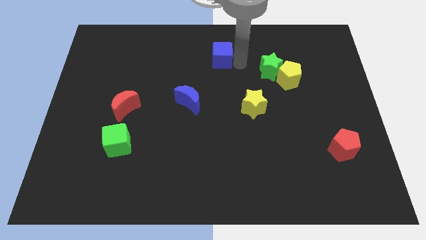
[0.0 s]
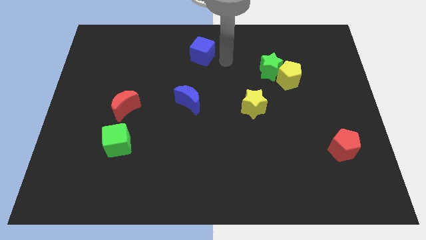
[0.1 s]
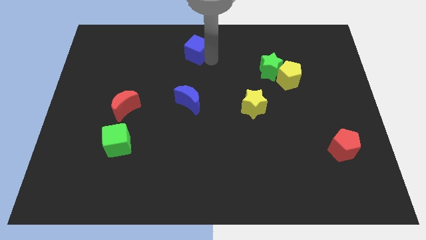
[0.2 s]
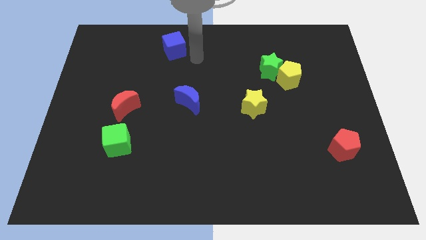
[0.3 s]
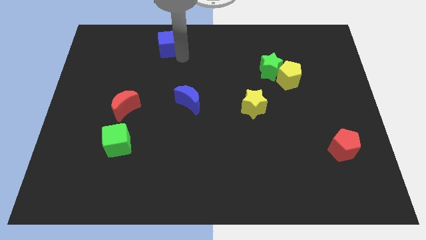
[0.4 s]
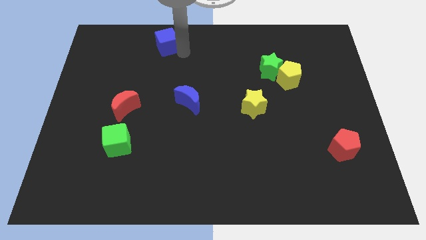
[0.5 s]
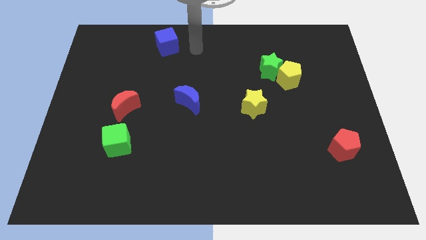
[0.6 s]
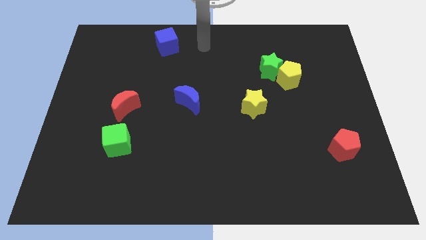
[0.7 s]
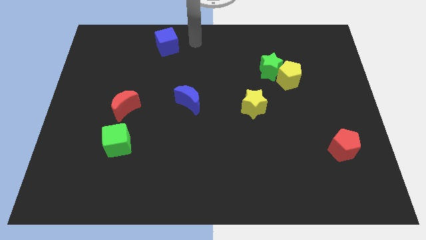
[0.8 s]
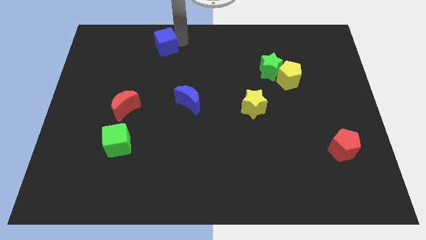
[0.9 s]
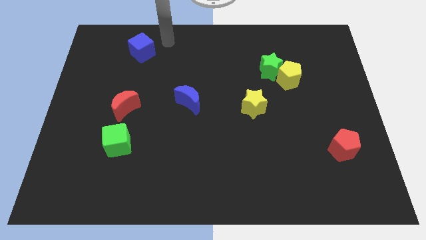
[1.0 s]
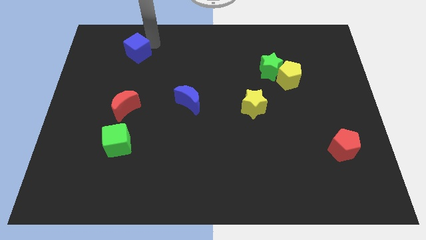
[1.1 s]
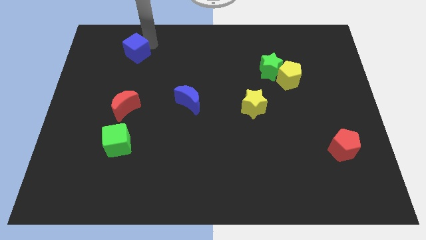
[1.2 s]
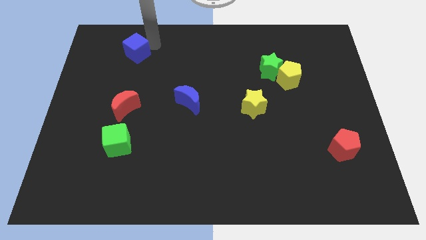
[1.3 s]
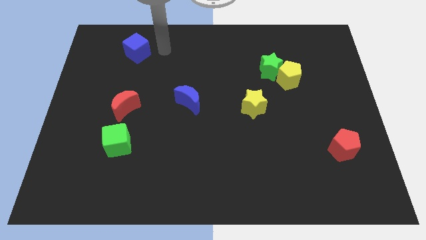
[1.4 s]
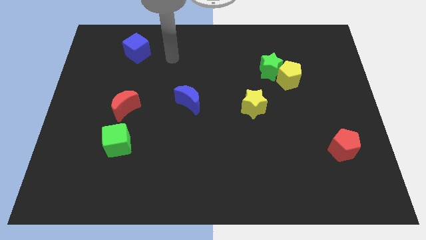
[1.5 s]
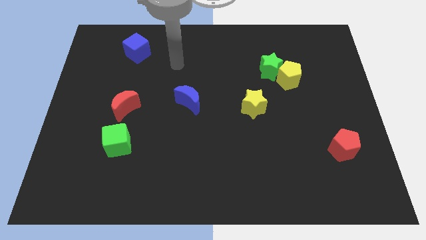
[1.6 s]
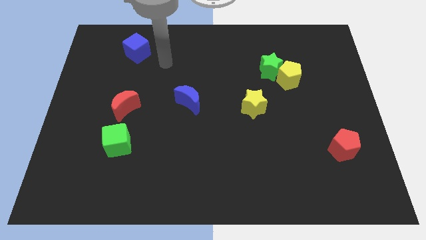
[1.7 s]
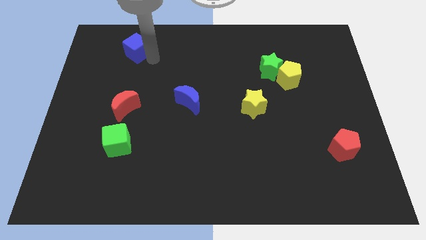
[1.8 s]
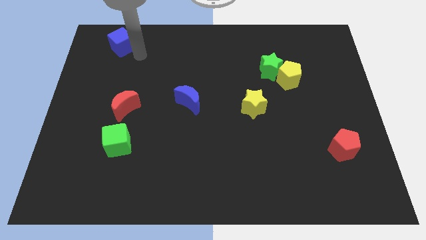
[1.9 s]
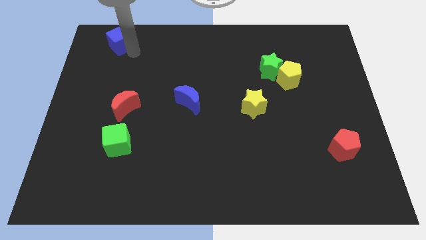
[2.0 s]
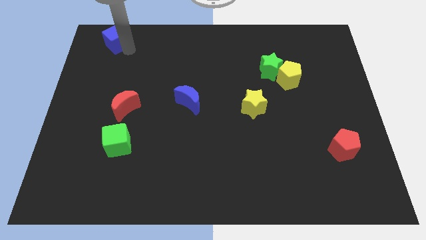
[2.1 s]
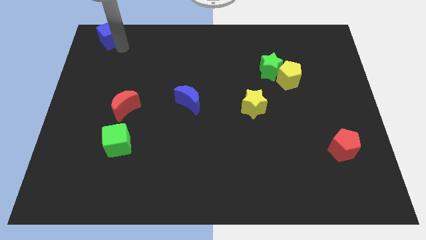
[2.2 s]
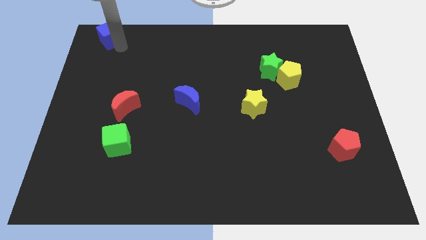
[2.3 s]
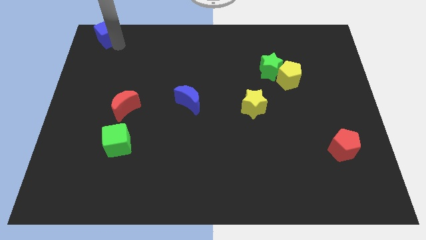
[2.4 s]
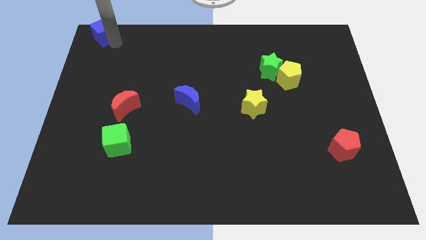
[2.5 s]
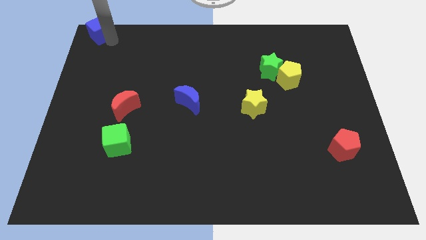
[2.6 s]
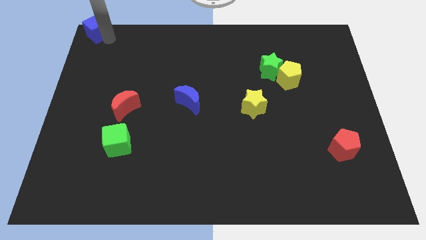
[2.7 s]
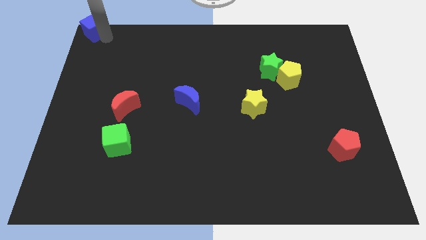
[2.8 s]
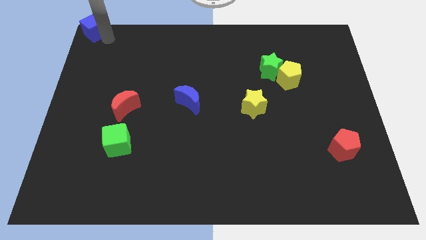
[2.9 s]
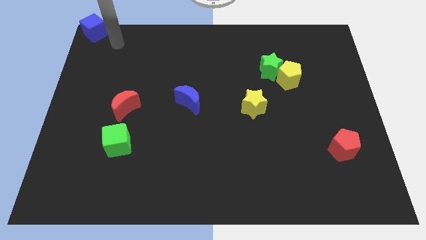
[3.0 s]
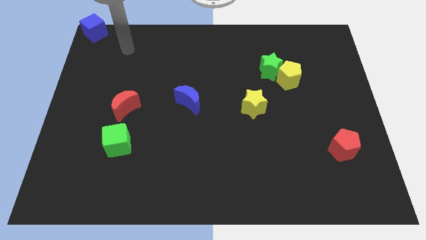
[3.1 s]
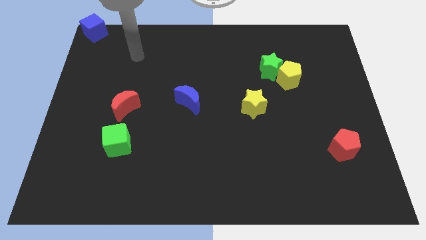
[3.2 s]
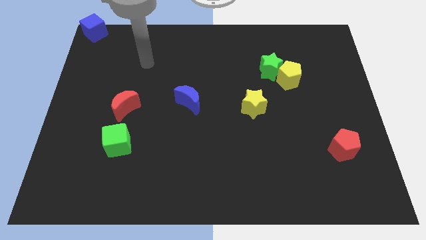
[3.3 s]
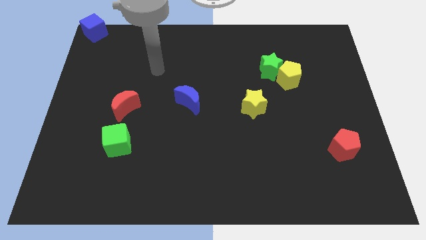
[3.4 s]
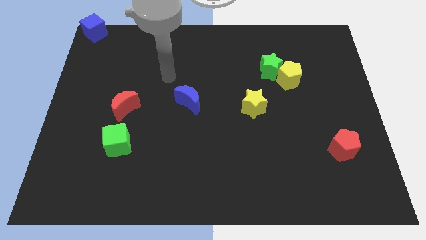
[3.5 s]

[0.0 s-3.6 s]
move the blue cube to the top left corner of the board

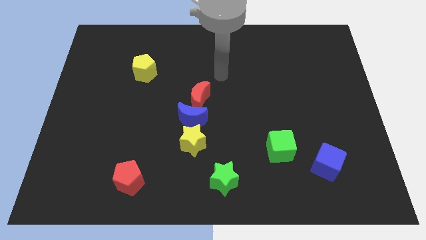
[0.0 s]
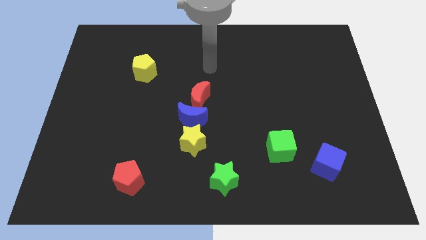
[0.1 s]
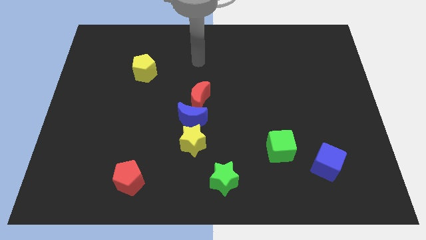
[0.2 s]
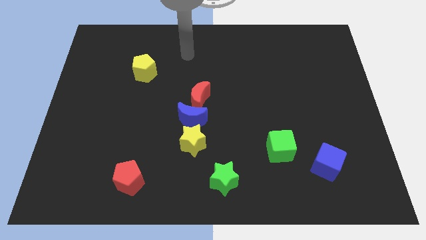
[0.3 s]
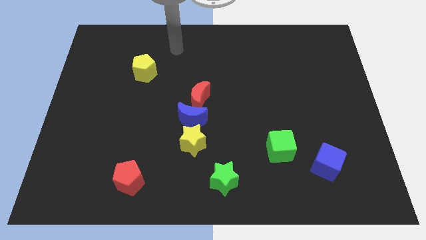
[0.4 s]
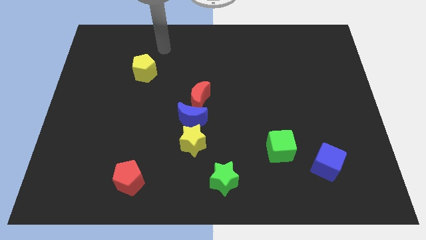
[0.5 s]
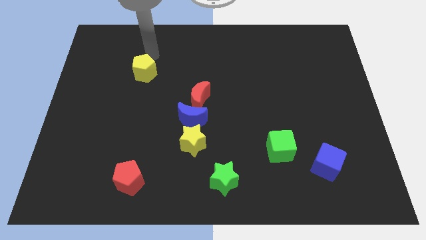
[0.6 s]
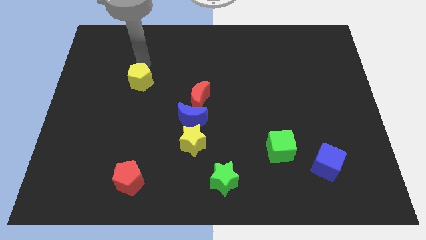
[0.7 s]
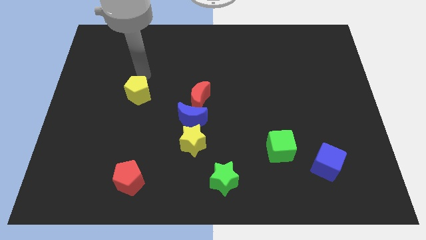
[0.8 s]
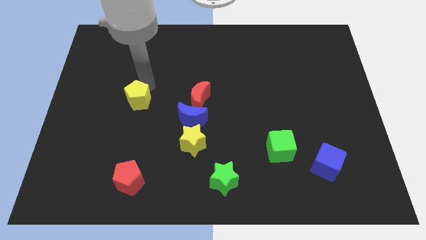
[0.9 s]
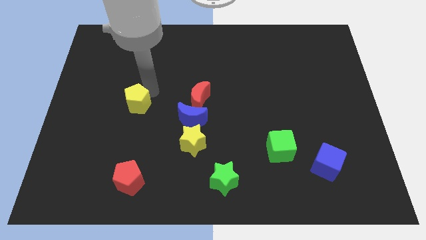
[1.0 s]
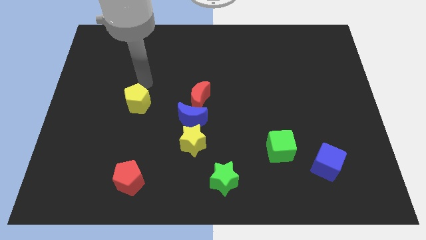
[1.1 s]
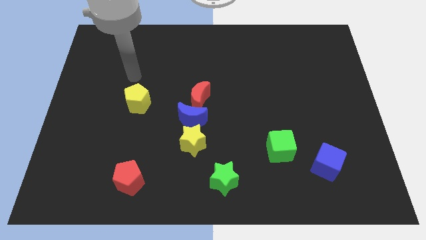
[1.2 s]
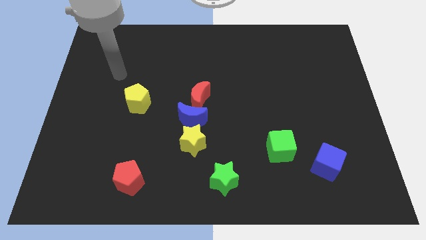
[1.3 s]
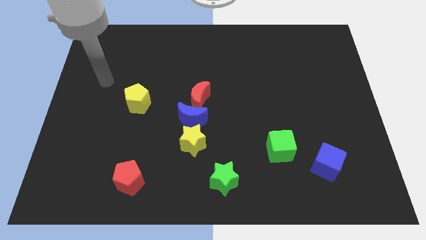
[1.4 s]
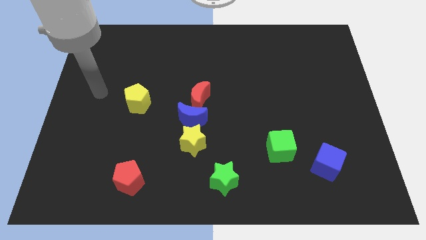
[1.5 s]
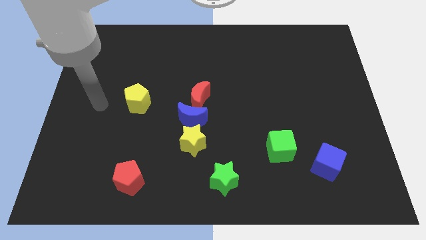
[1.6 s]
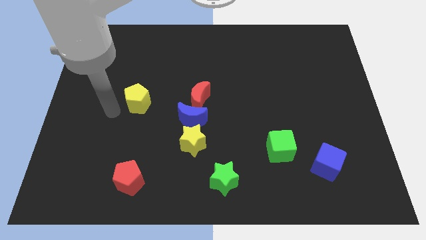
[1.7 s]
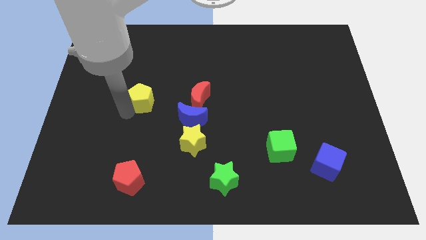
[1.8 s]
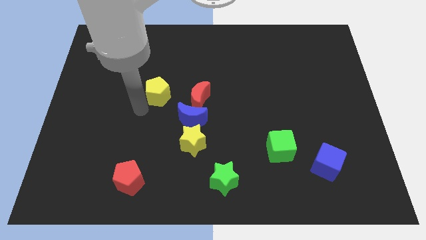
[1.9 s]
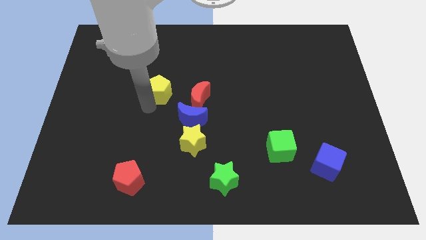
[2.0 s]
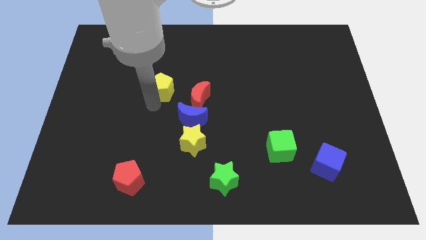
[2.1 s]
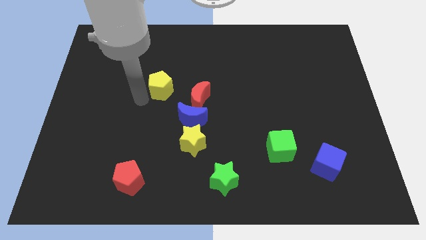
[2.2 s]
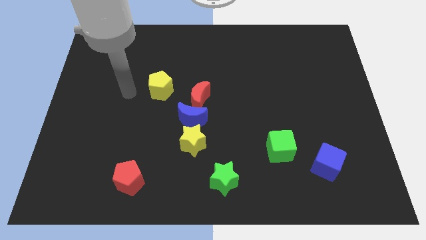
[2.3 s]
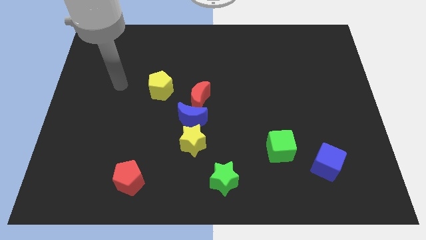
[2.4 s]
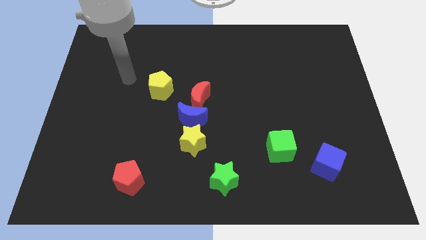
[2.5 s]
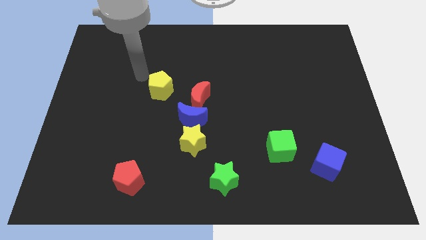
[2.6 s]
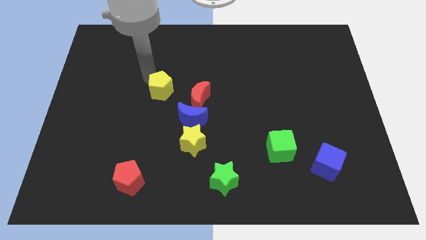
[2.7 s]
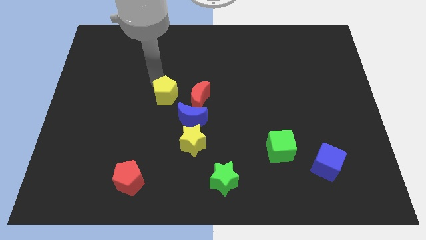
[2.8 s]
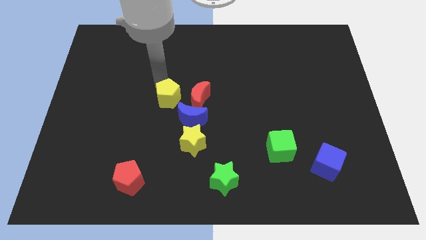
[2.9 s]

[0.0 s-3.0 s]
put yellow pentagon diagonally above red pentagon

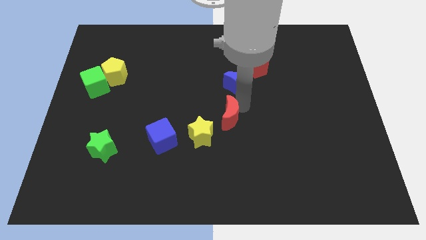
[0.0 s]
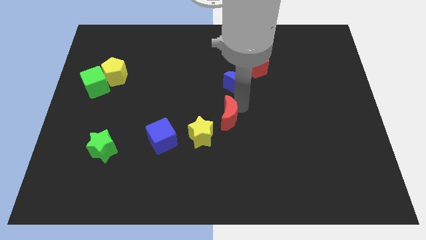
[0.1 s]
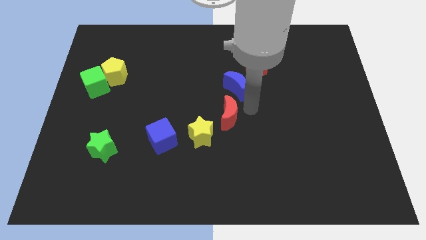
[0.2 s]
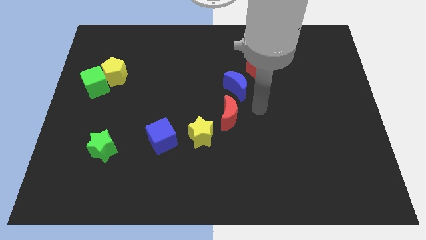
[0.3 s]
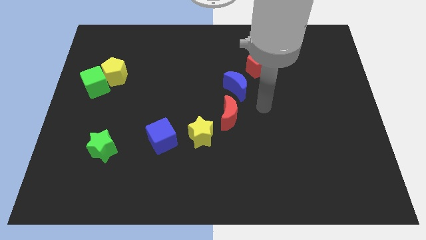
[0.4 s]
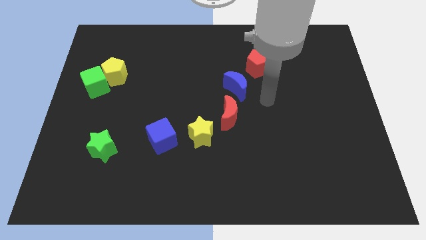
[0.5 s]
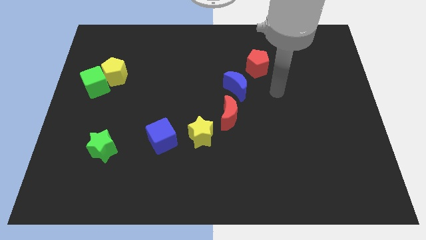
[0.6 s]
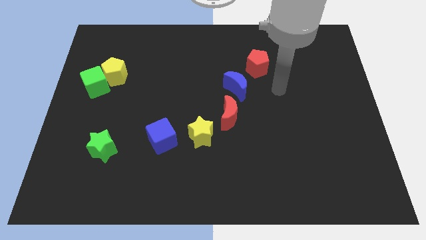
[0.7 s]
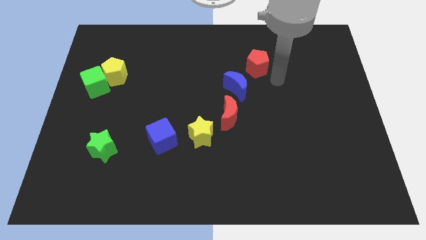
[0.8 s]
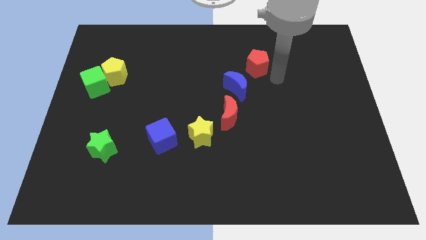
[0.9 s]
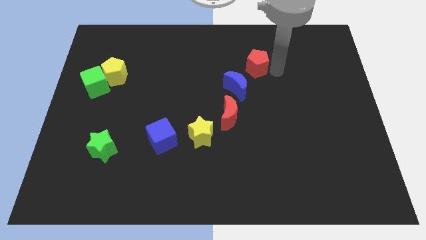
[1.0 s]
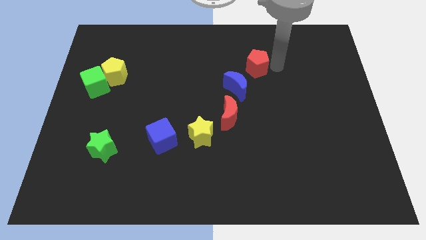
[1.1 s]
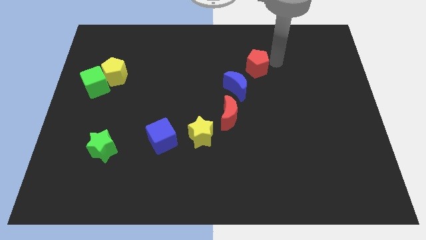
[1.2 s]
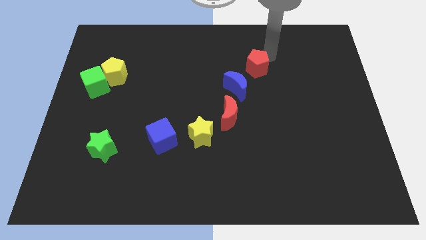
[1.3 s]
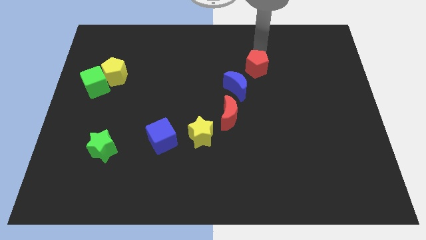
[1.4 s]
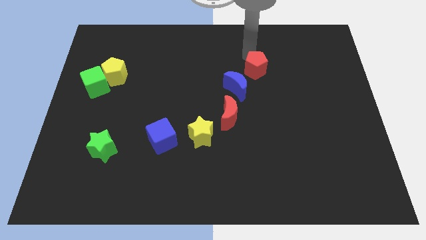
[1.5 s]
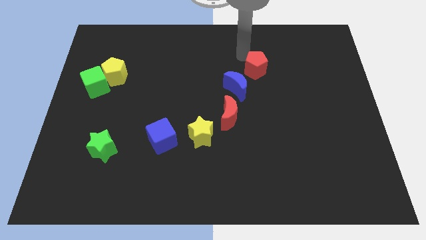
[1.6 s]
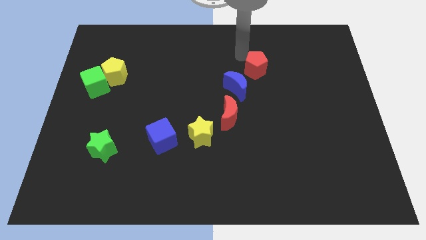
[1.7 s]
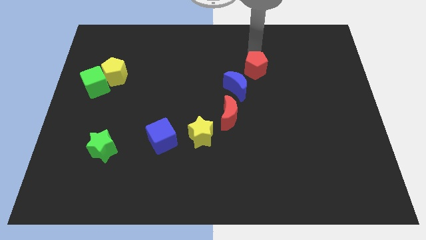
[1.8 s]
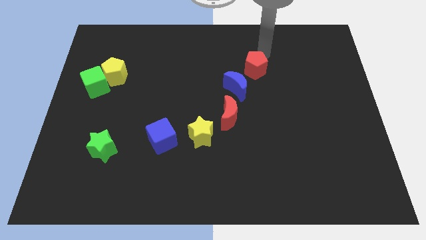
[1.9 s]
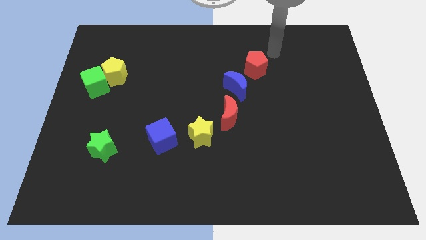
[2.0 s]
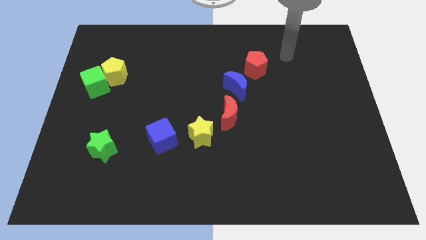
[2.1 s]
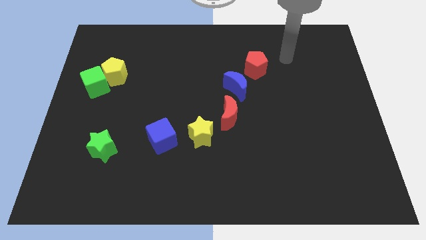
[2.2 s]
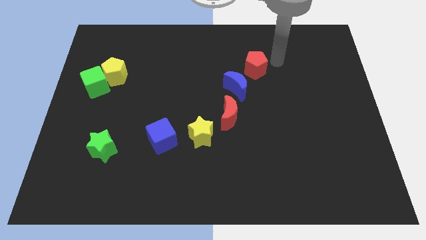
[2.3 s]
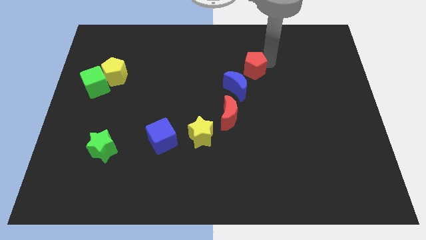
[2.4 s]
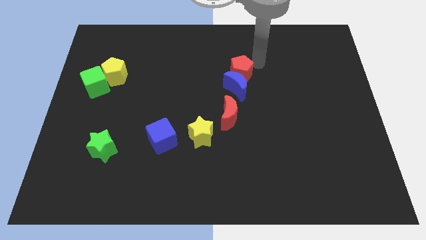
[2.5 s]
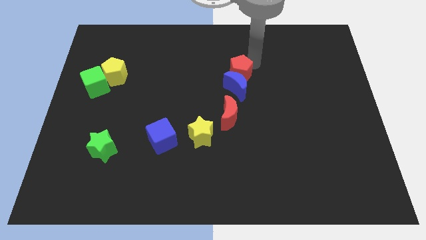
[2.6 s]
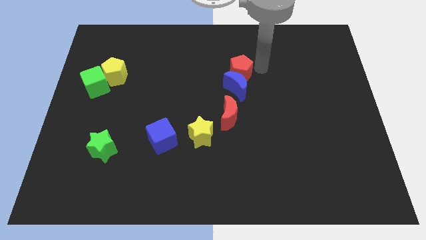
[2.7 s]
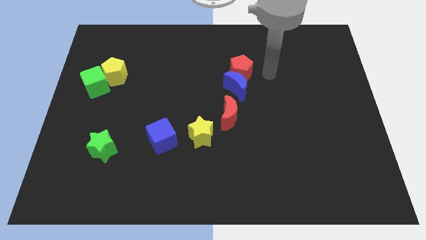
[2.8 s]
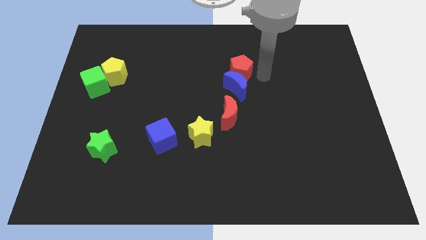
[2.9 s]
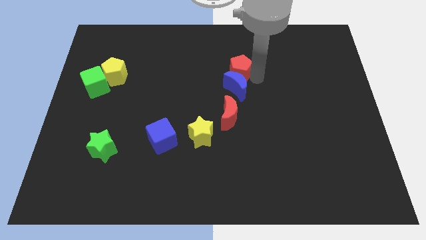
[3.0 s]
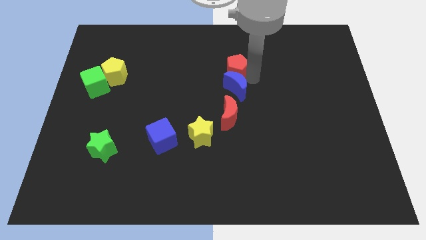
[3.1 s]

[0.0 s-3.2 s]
move red pentagon above blue moon
